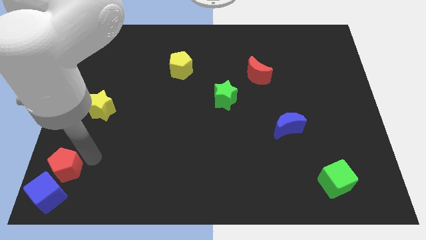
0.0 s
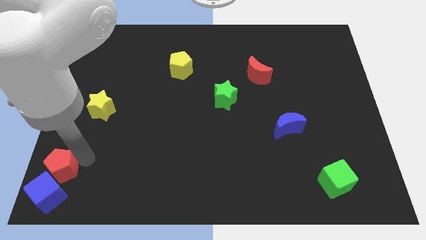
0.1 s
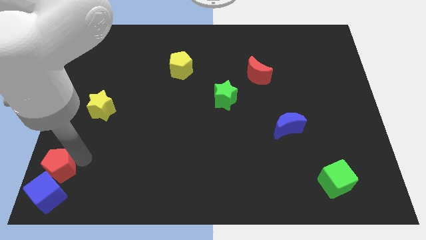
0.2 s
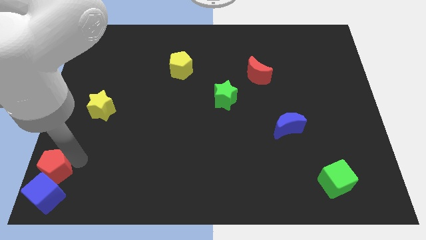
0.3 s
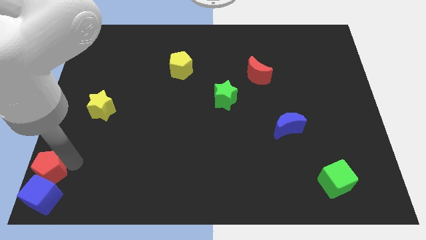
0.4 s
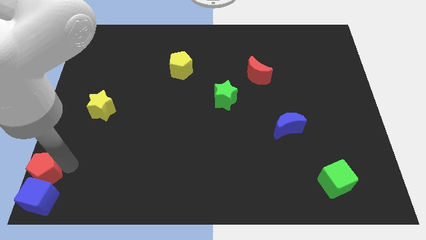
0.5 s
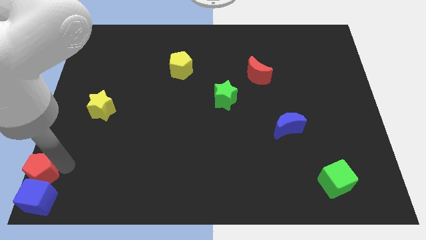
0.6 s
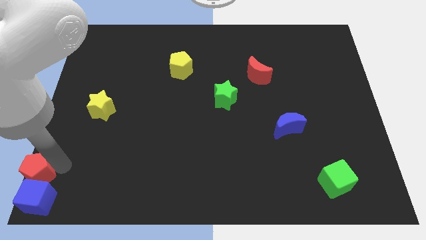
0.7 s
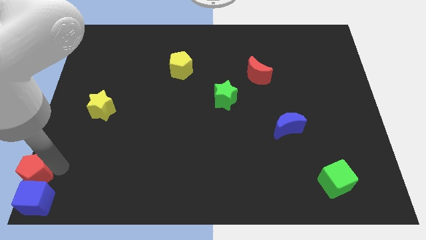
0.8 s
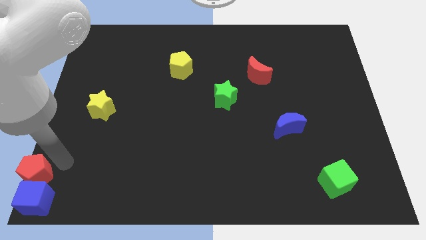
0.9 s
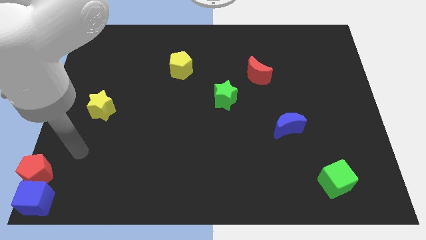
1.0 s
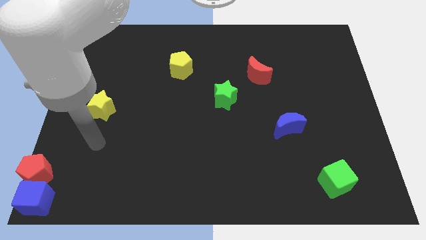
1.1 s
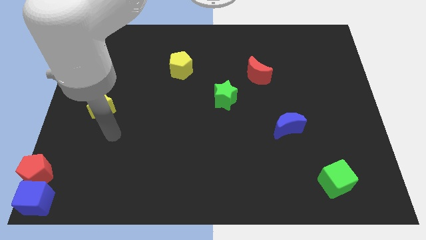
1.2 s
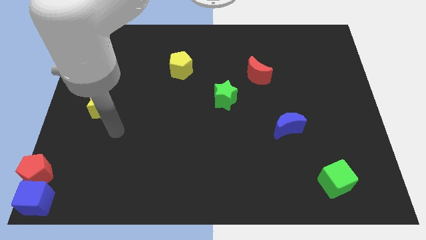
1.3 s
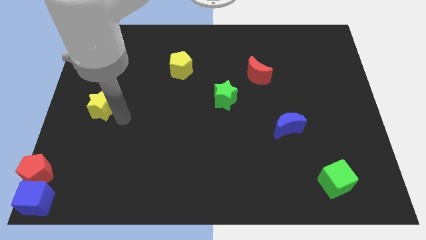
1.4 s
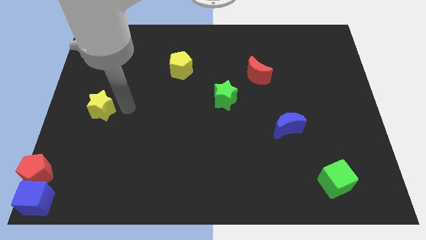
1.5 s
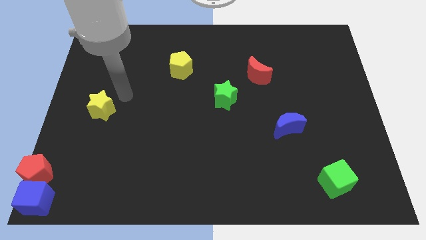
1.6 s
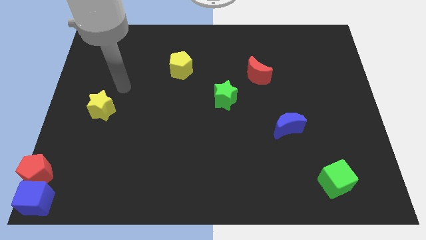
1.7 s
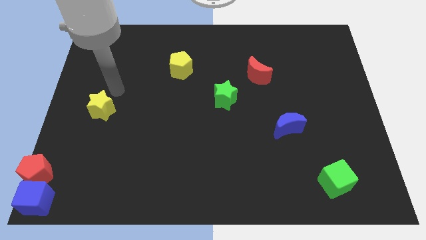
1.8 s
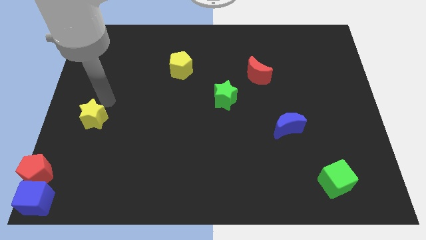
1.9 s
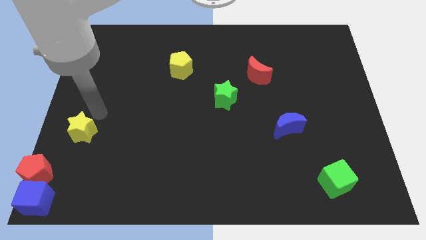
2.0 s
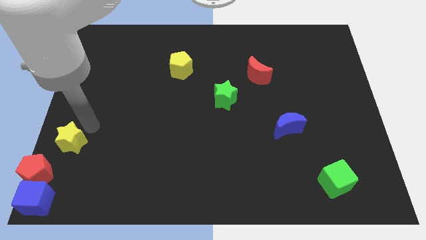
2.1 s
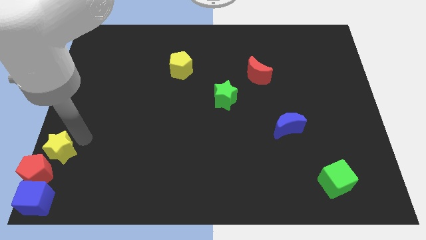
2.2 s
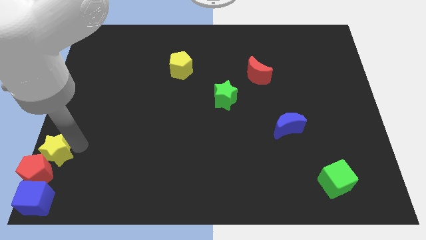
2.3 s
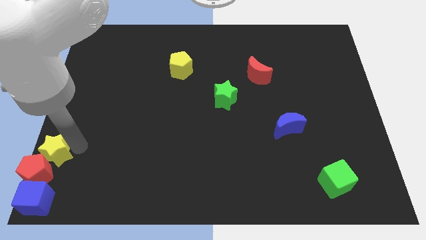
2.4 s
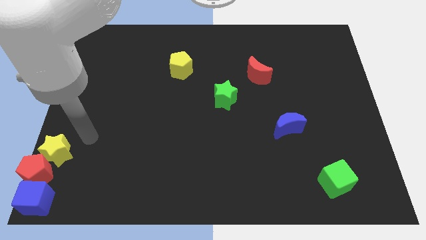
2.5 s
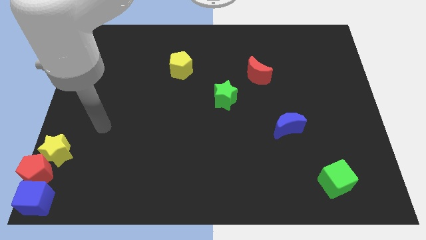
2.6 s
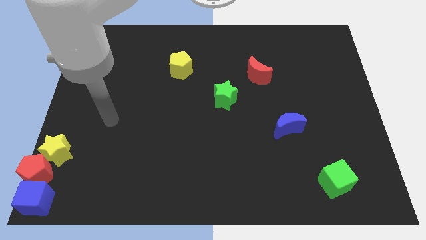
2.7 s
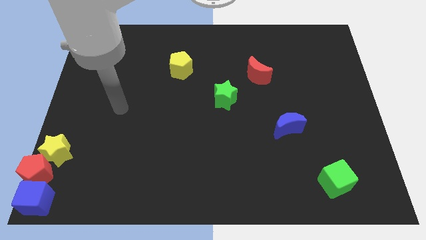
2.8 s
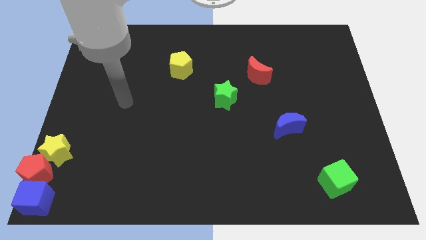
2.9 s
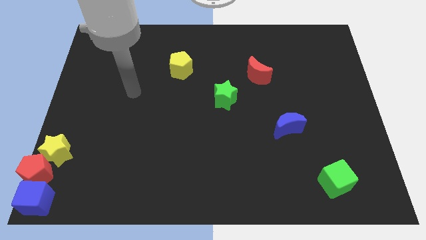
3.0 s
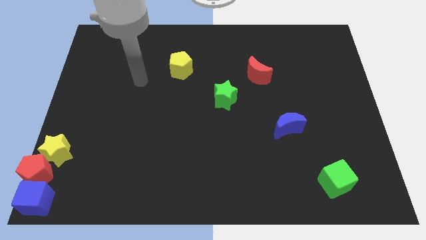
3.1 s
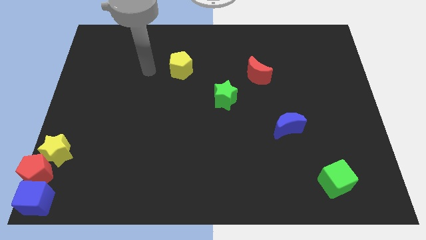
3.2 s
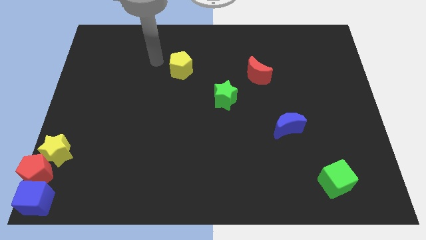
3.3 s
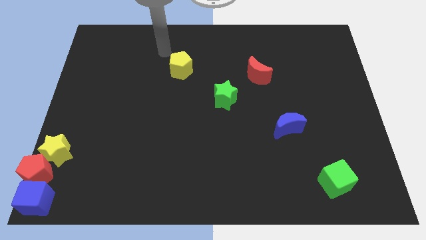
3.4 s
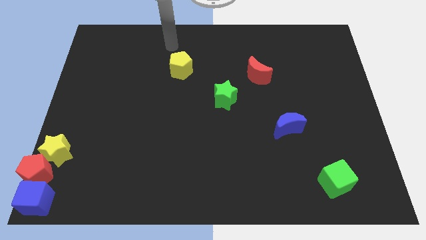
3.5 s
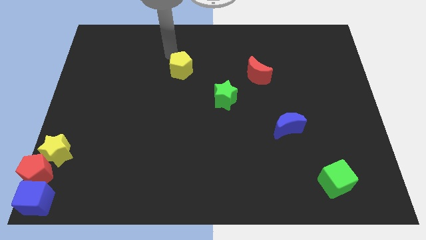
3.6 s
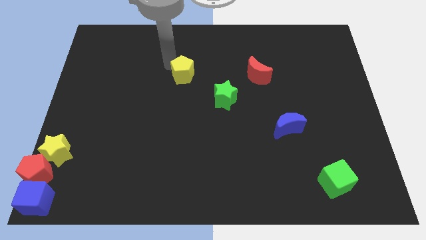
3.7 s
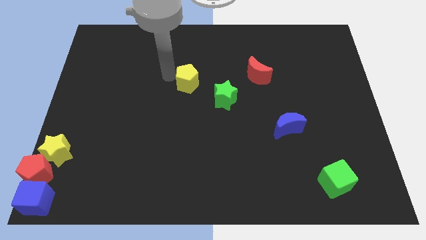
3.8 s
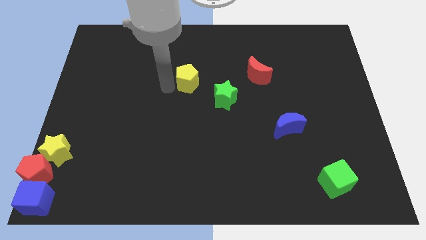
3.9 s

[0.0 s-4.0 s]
pull the yellow star into red pentagon

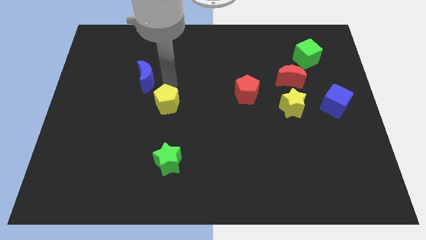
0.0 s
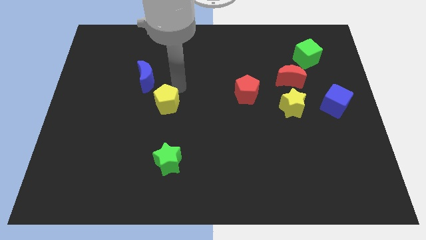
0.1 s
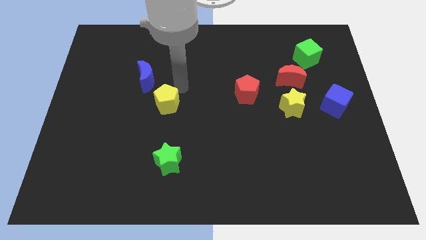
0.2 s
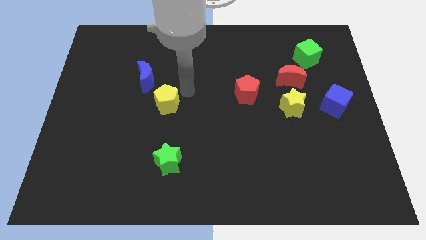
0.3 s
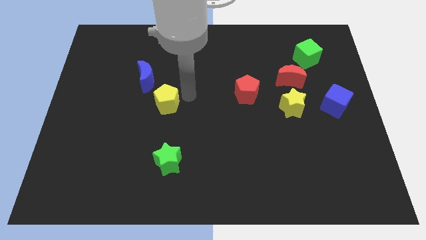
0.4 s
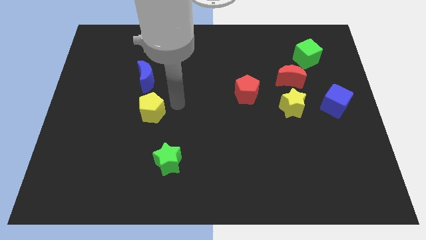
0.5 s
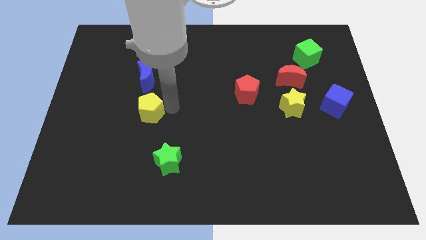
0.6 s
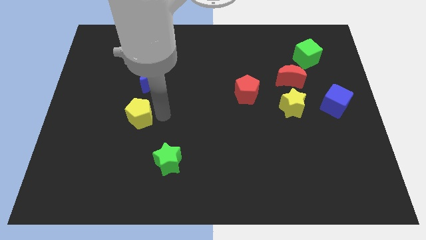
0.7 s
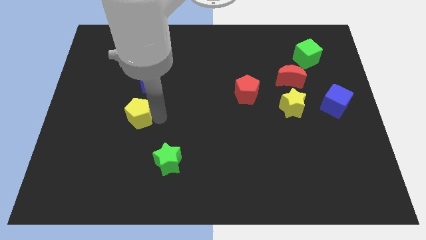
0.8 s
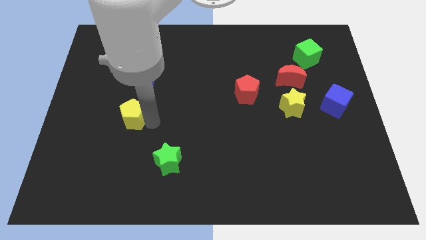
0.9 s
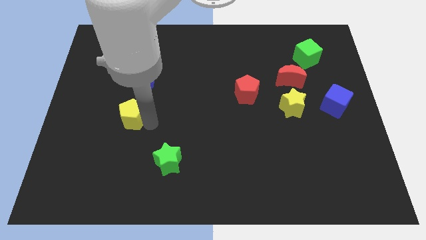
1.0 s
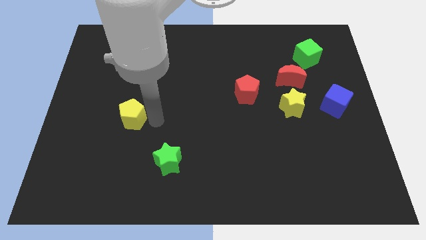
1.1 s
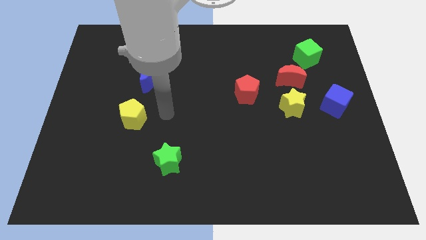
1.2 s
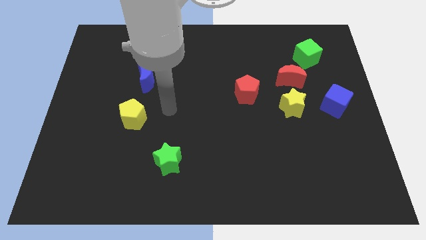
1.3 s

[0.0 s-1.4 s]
push the yellow pentagon to the right of the board

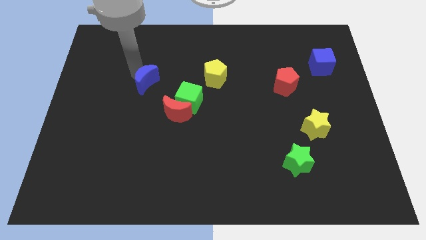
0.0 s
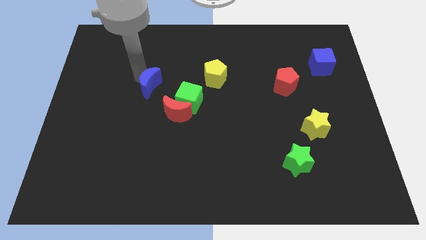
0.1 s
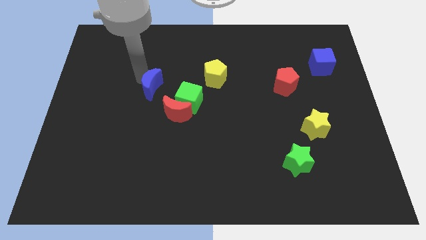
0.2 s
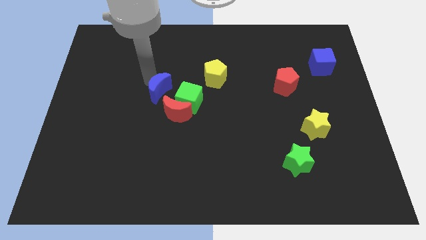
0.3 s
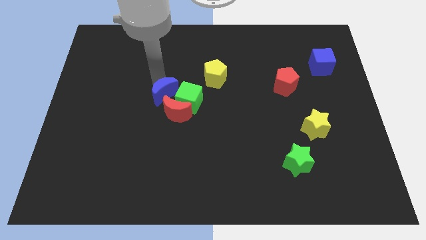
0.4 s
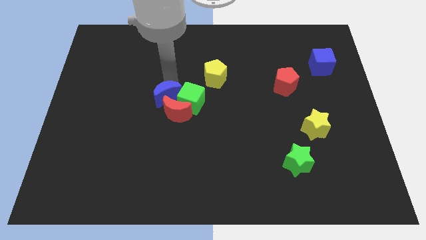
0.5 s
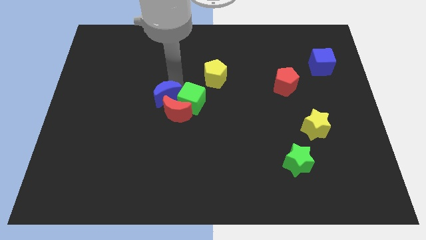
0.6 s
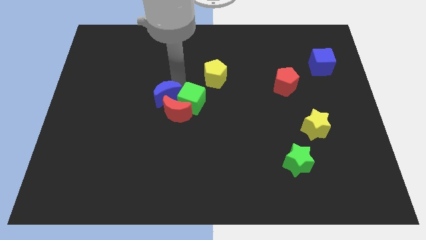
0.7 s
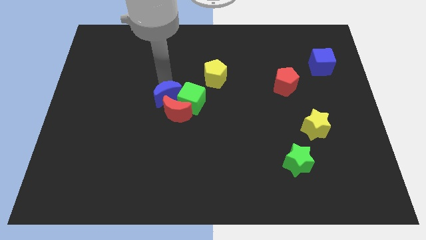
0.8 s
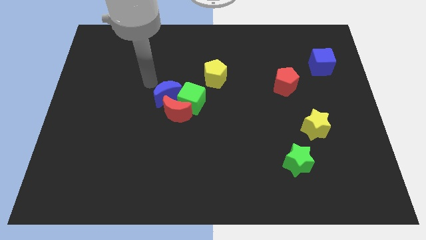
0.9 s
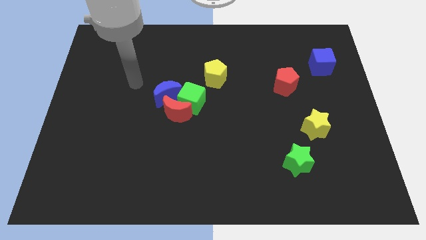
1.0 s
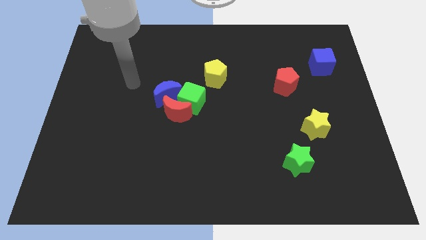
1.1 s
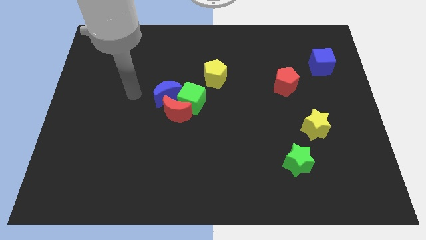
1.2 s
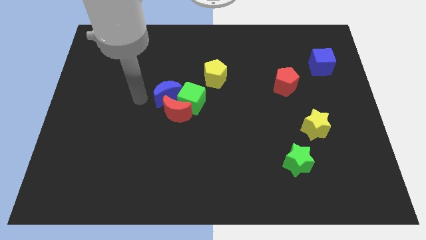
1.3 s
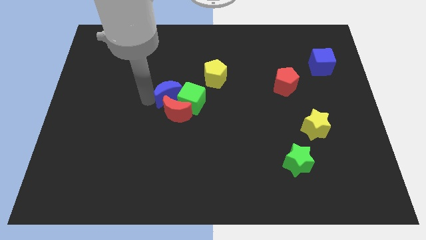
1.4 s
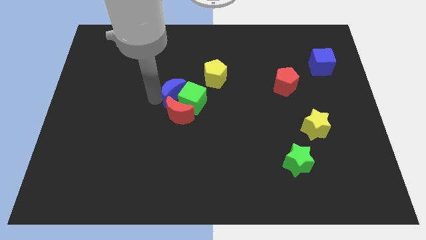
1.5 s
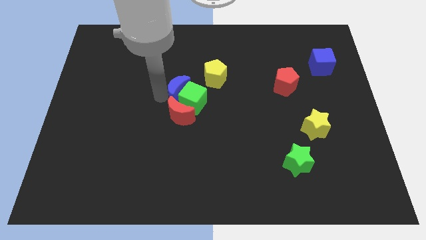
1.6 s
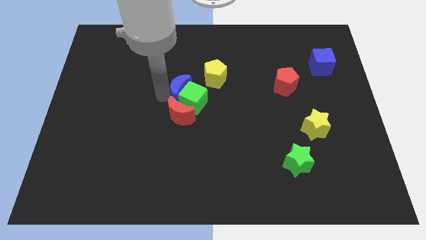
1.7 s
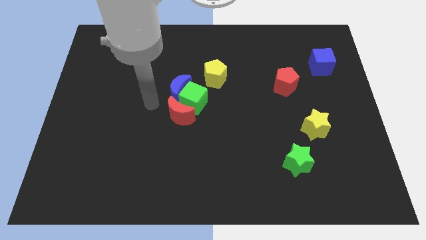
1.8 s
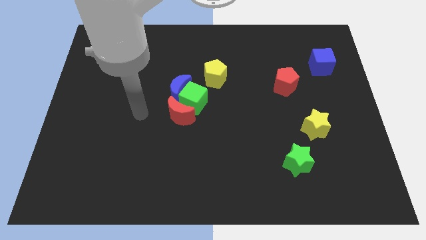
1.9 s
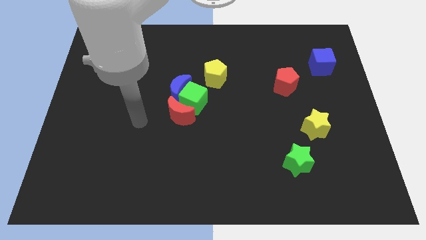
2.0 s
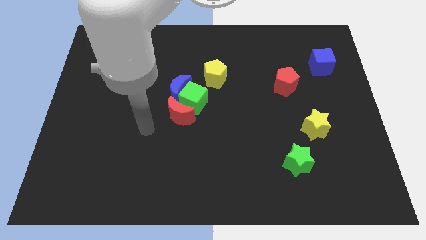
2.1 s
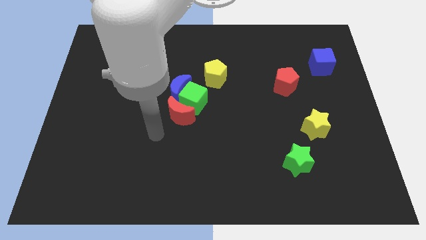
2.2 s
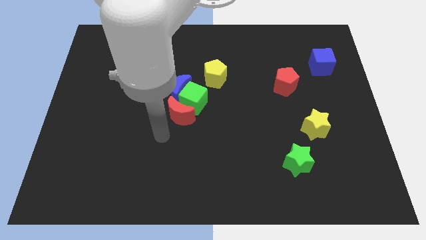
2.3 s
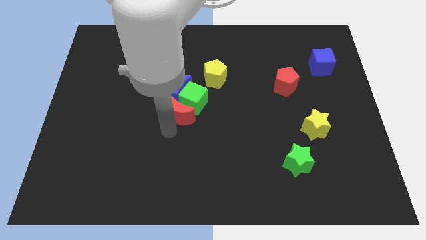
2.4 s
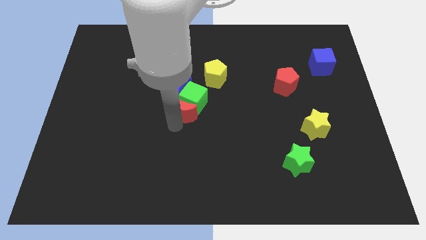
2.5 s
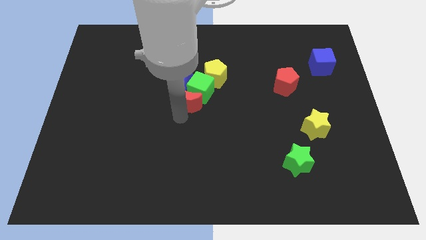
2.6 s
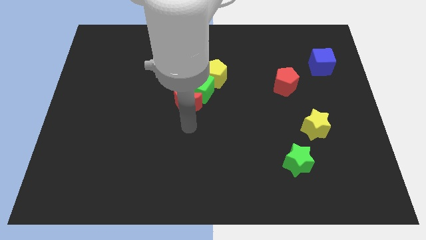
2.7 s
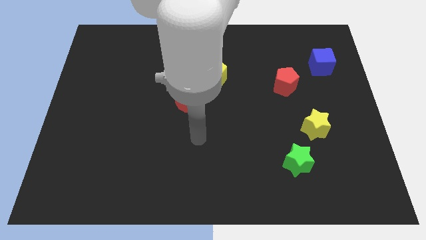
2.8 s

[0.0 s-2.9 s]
push a group of blocks to the center

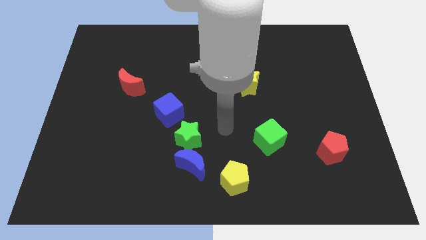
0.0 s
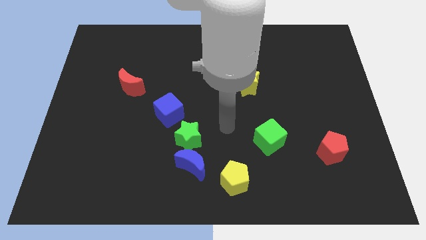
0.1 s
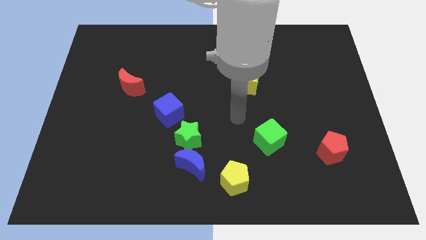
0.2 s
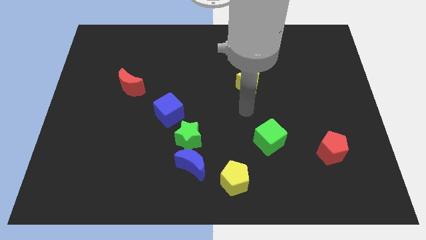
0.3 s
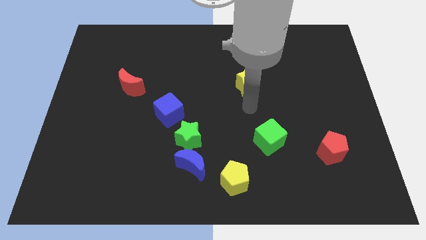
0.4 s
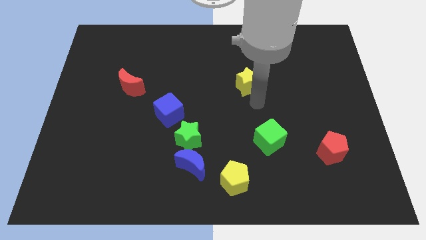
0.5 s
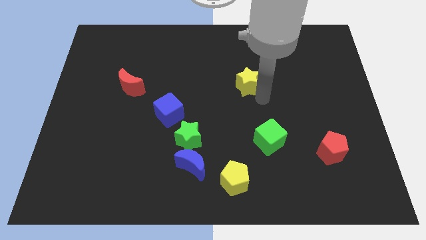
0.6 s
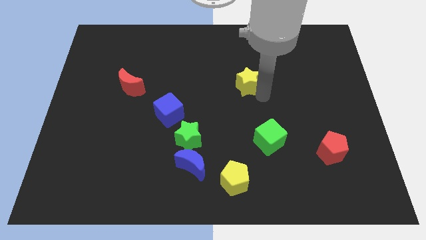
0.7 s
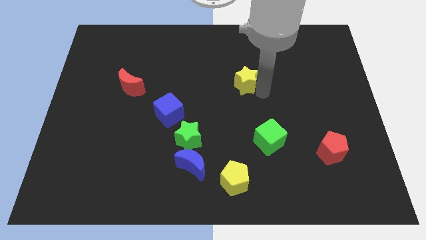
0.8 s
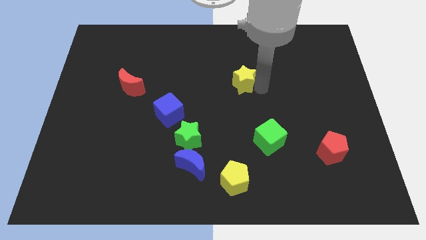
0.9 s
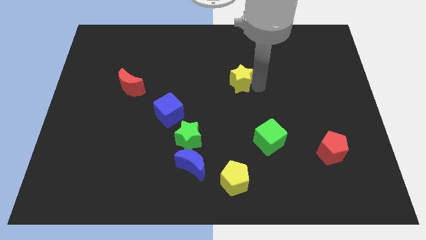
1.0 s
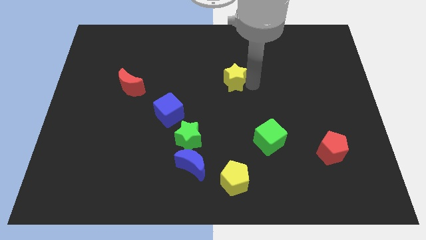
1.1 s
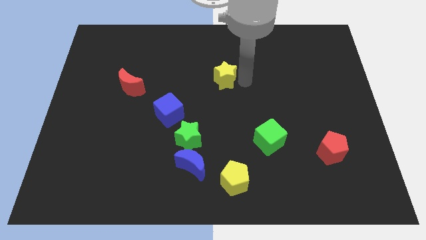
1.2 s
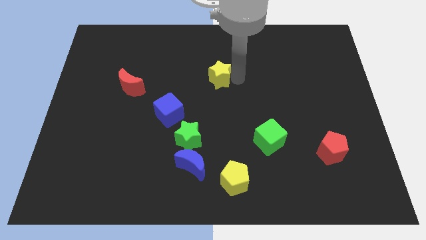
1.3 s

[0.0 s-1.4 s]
move the yellow star to the left side of the board
